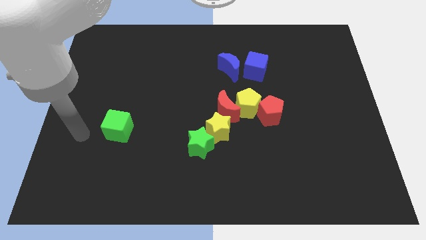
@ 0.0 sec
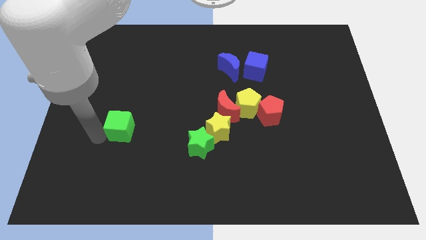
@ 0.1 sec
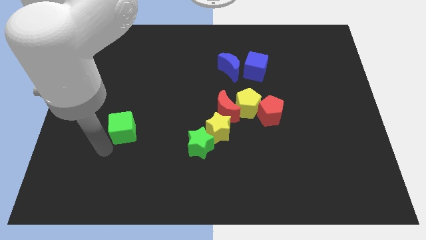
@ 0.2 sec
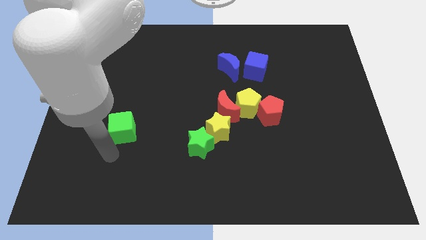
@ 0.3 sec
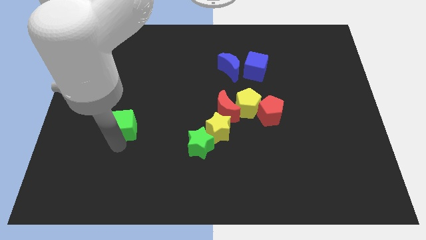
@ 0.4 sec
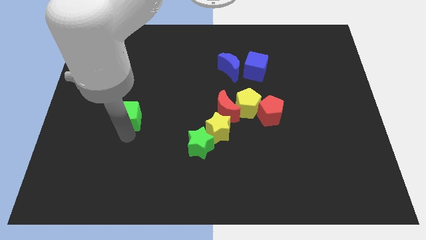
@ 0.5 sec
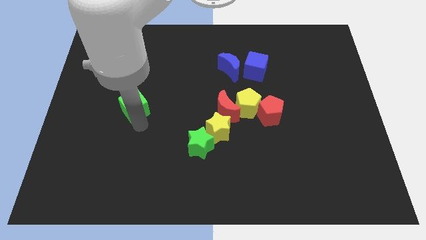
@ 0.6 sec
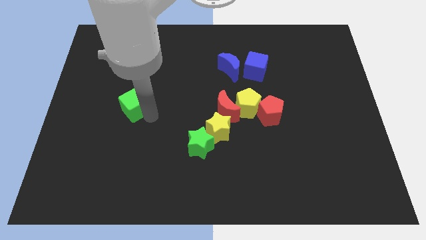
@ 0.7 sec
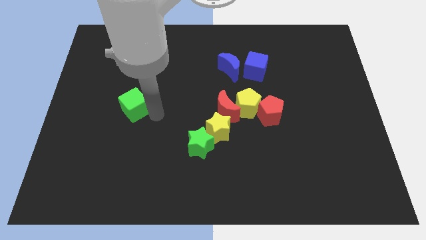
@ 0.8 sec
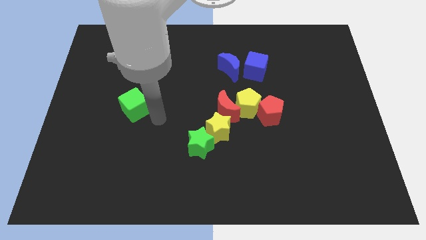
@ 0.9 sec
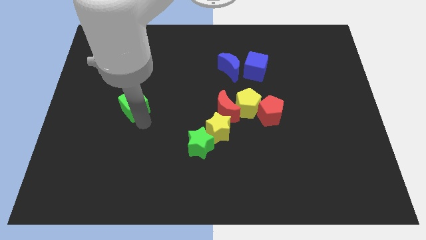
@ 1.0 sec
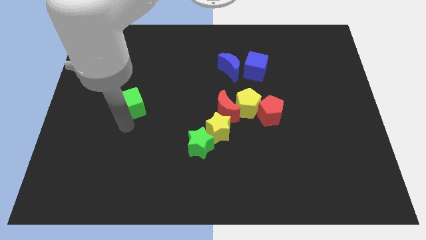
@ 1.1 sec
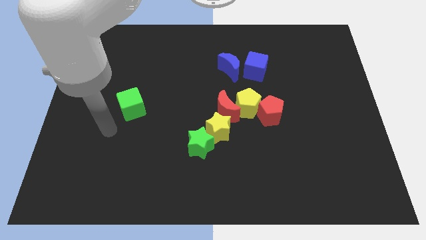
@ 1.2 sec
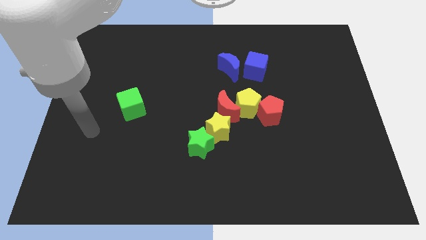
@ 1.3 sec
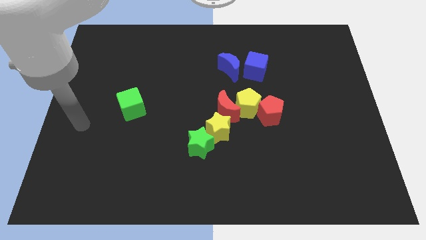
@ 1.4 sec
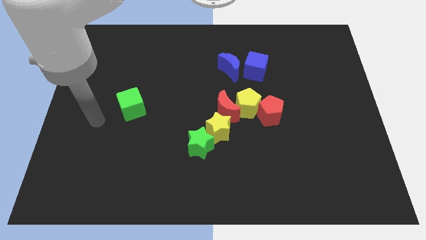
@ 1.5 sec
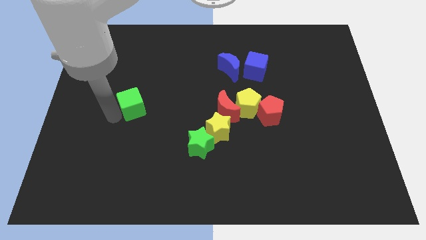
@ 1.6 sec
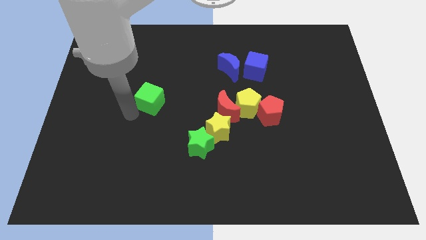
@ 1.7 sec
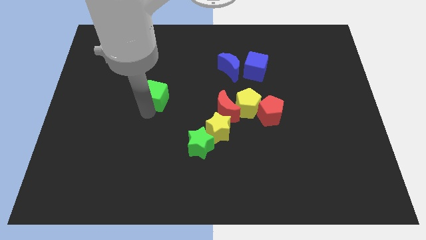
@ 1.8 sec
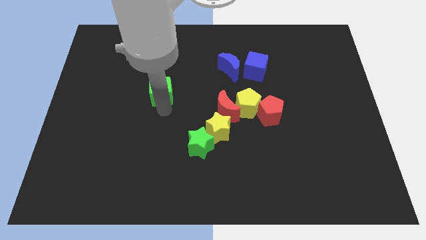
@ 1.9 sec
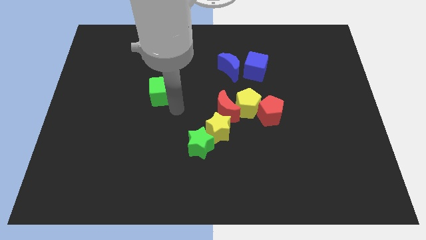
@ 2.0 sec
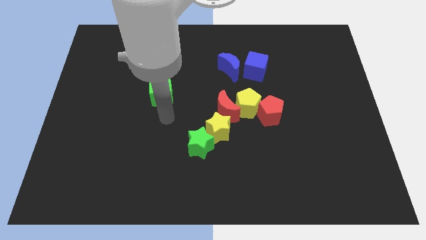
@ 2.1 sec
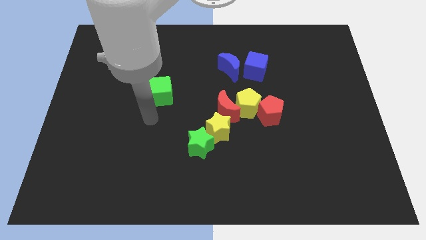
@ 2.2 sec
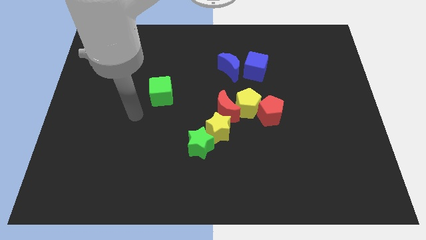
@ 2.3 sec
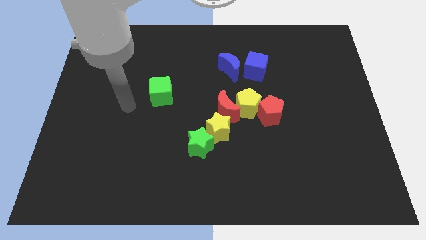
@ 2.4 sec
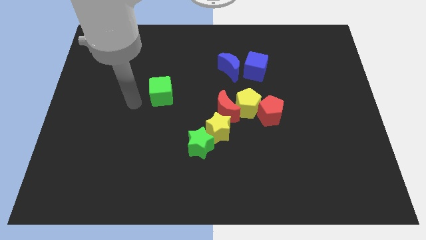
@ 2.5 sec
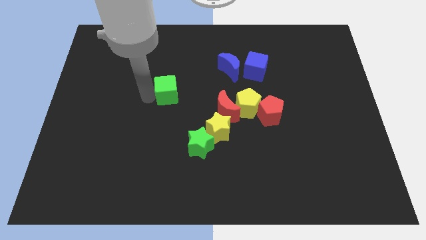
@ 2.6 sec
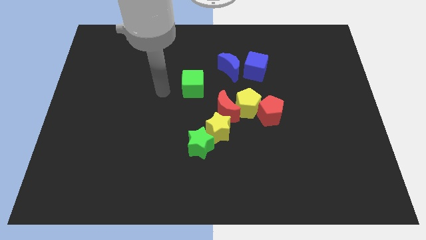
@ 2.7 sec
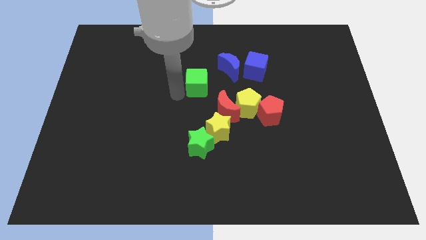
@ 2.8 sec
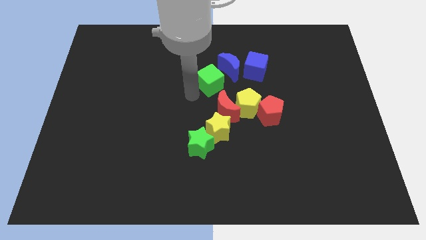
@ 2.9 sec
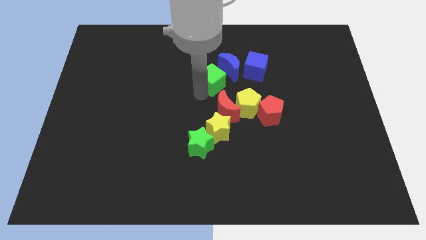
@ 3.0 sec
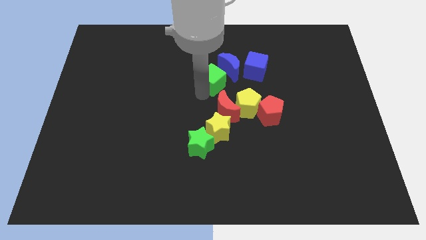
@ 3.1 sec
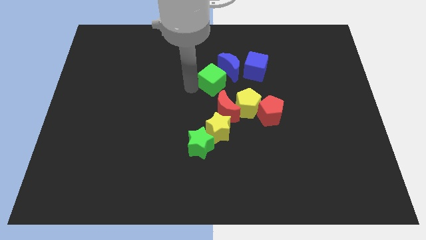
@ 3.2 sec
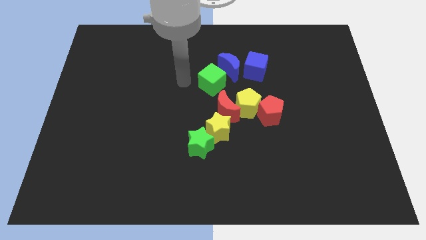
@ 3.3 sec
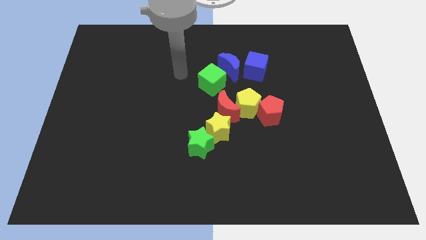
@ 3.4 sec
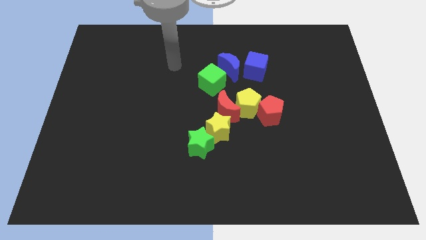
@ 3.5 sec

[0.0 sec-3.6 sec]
push green cube towards blue blocks

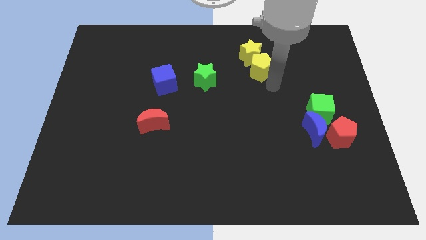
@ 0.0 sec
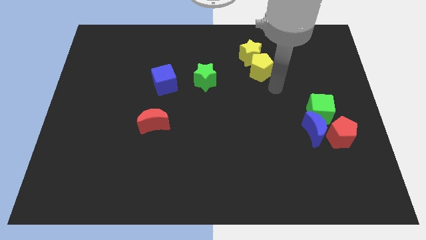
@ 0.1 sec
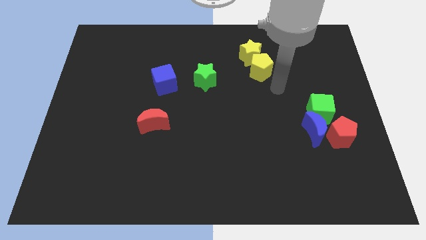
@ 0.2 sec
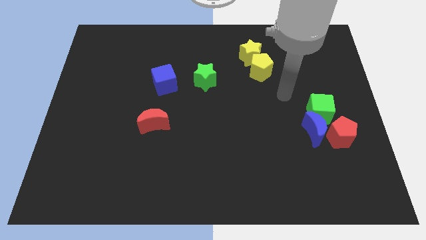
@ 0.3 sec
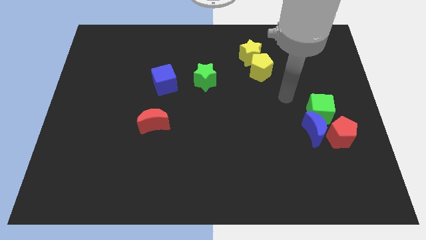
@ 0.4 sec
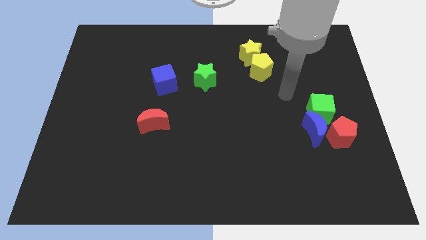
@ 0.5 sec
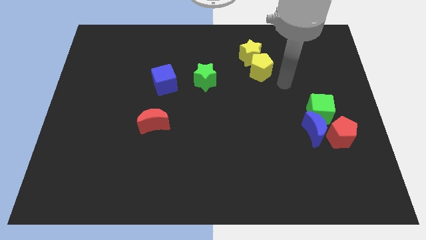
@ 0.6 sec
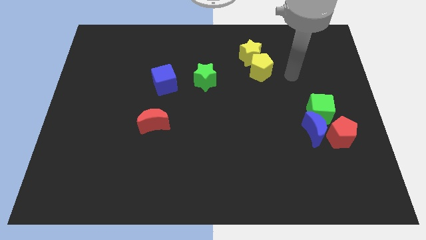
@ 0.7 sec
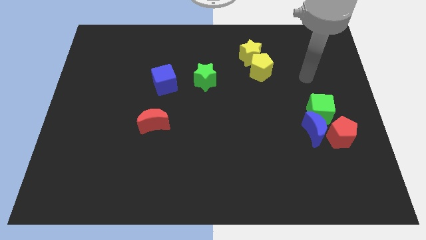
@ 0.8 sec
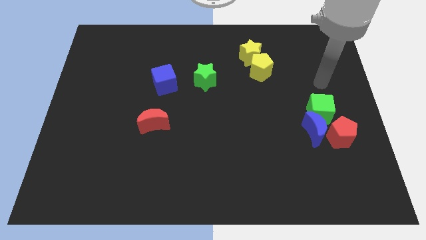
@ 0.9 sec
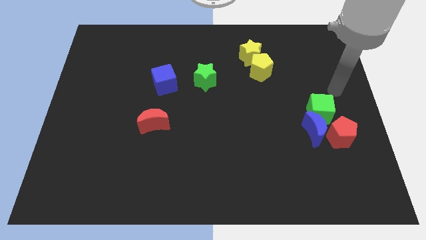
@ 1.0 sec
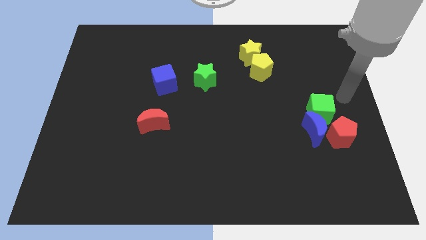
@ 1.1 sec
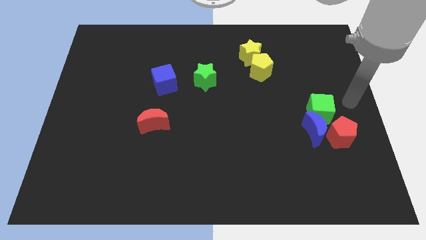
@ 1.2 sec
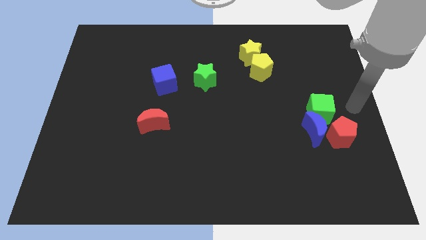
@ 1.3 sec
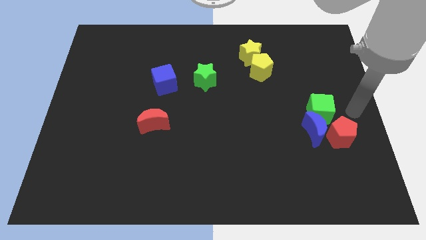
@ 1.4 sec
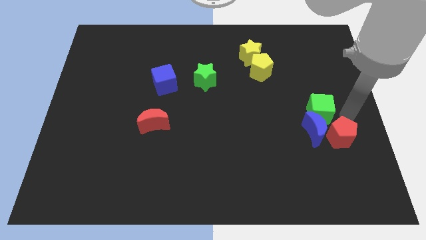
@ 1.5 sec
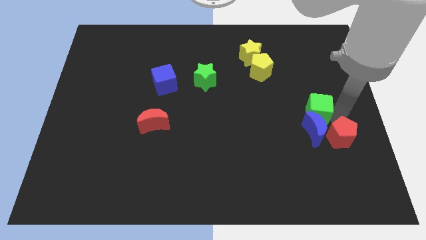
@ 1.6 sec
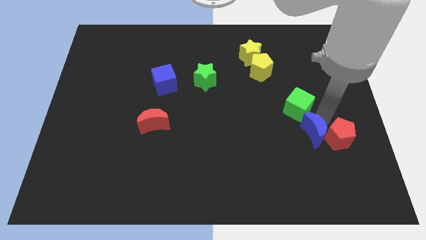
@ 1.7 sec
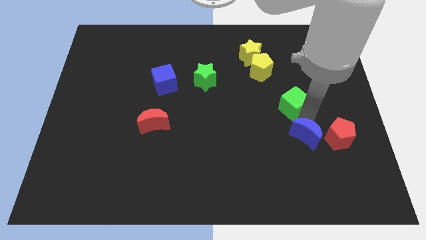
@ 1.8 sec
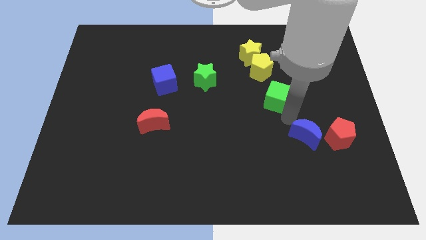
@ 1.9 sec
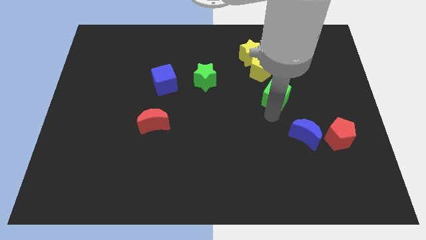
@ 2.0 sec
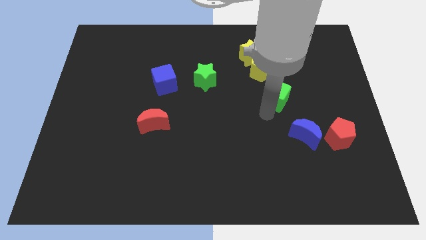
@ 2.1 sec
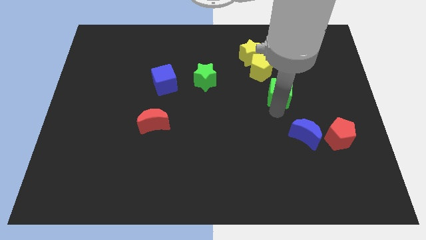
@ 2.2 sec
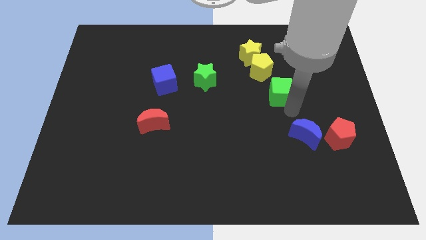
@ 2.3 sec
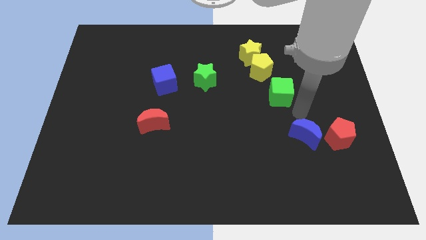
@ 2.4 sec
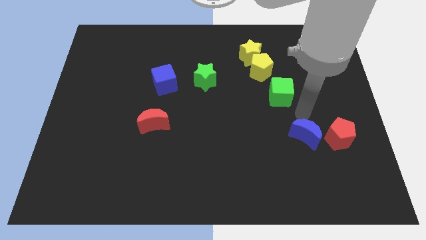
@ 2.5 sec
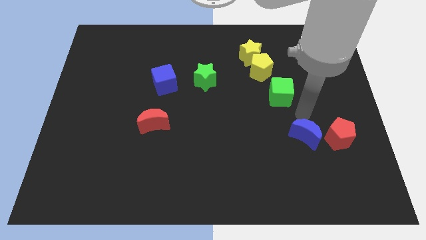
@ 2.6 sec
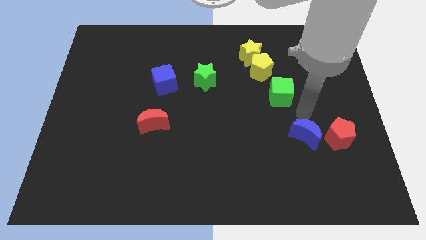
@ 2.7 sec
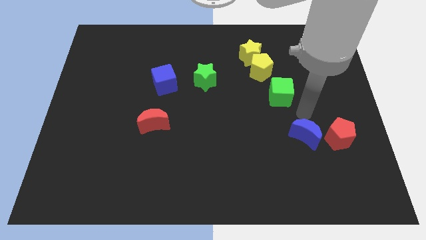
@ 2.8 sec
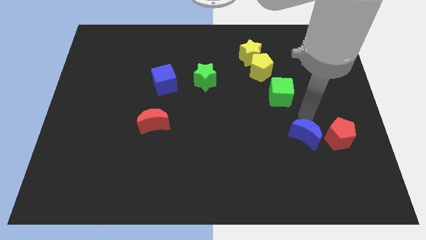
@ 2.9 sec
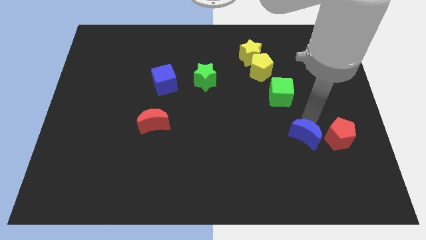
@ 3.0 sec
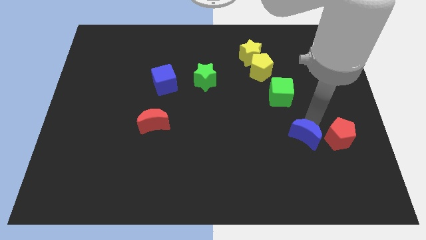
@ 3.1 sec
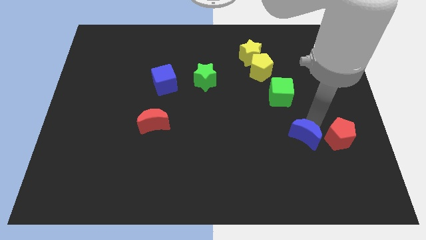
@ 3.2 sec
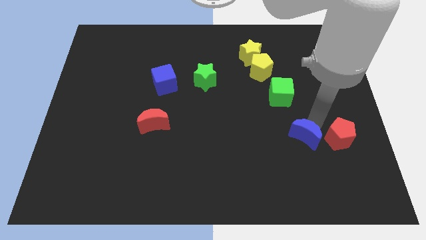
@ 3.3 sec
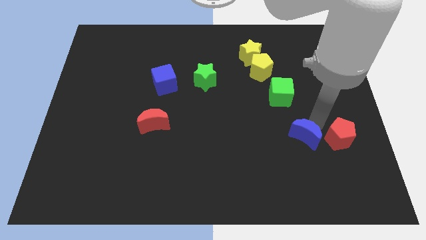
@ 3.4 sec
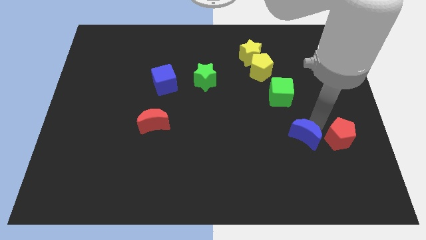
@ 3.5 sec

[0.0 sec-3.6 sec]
place the green cube at the bottom right of the yellow pentagon diagonally

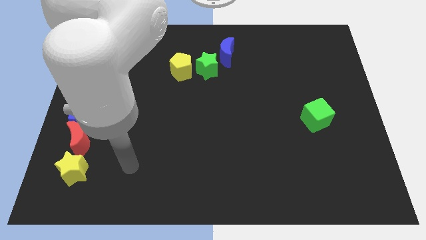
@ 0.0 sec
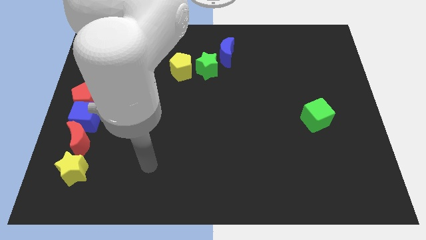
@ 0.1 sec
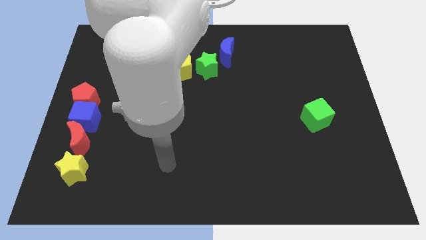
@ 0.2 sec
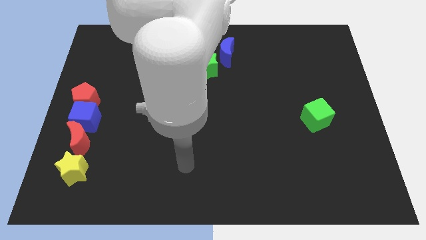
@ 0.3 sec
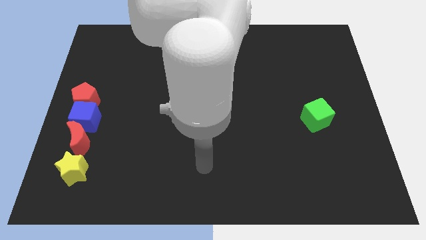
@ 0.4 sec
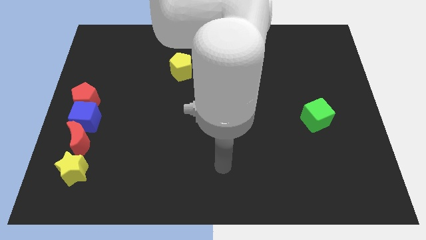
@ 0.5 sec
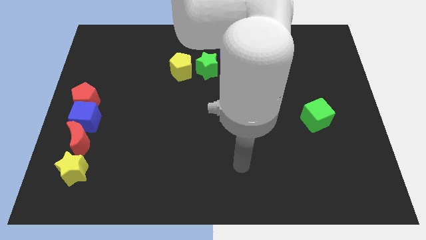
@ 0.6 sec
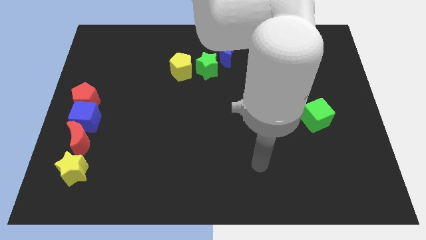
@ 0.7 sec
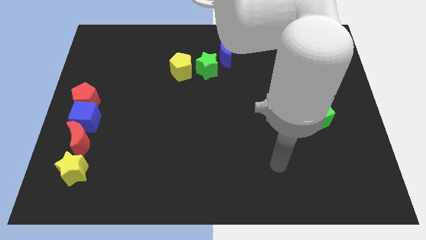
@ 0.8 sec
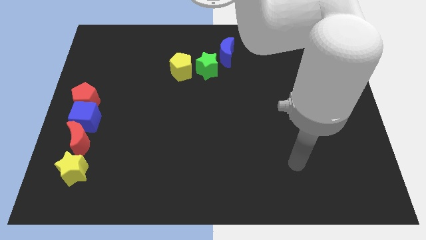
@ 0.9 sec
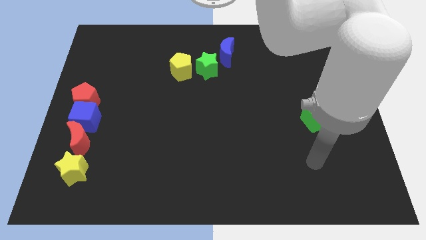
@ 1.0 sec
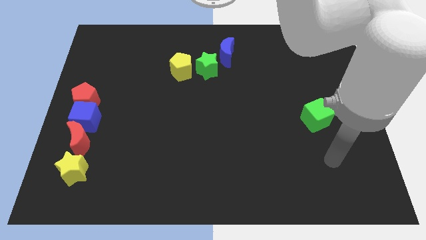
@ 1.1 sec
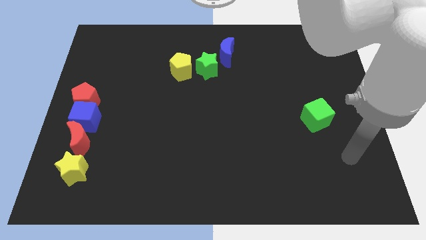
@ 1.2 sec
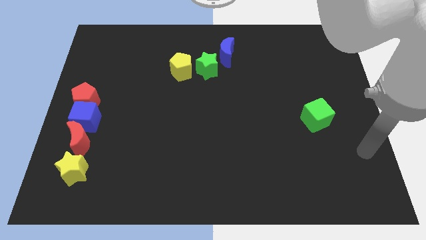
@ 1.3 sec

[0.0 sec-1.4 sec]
move your arm to the bottom right side of the green cube

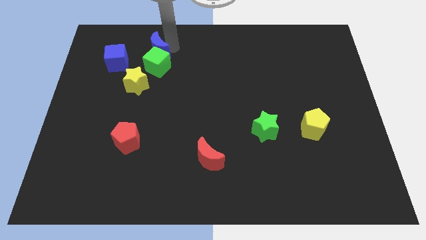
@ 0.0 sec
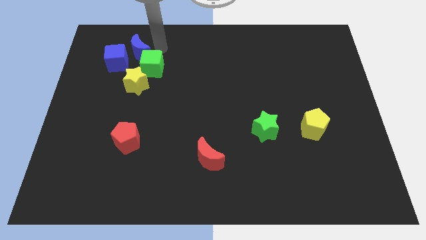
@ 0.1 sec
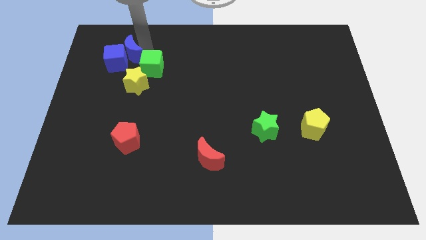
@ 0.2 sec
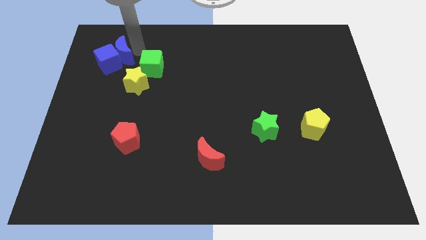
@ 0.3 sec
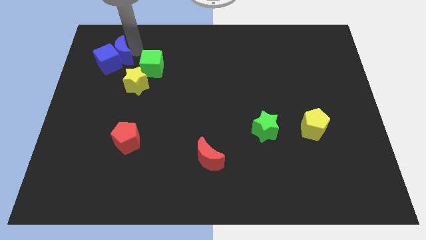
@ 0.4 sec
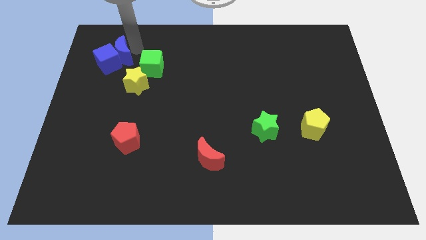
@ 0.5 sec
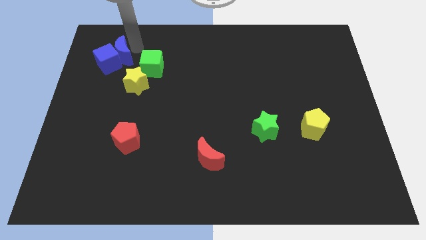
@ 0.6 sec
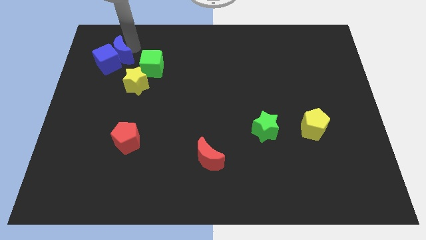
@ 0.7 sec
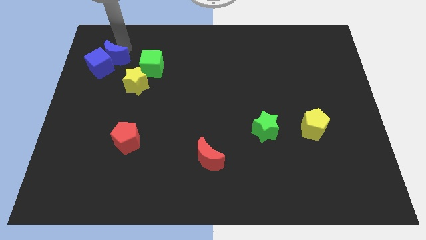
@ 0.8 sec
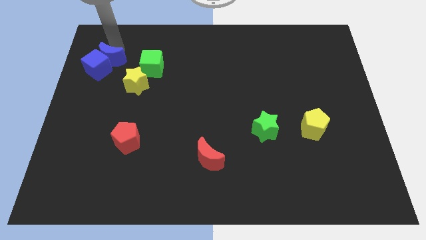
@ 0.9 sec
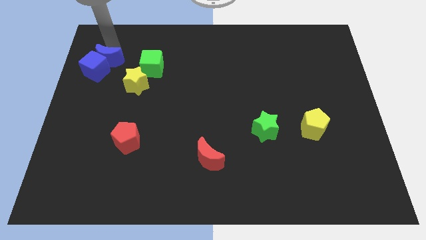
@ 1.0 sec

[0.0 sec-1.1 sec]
add blue moon into blue cube
